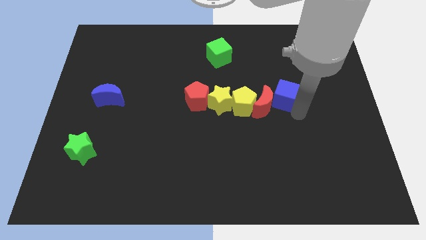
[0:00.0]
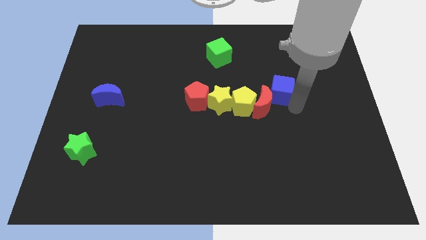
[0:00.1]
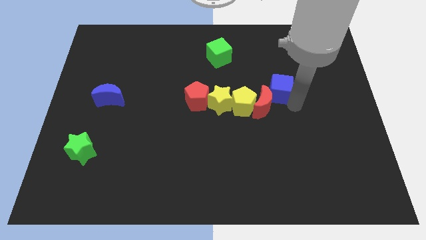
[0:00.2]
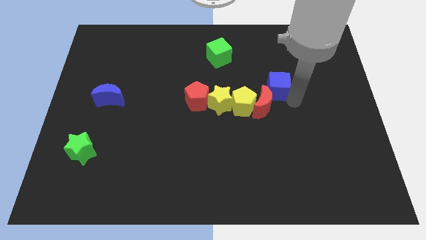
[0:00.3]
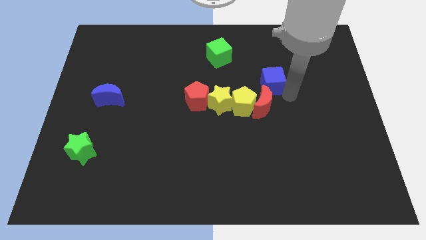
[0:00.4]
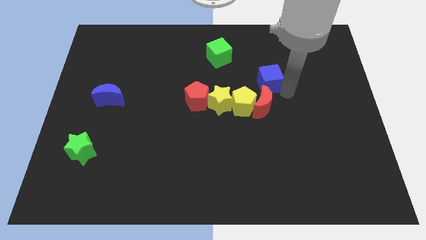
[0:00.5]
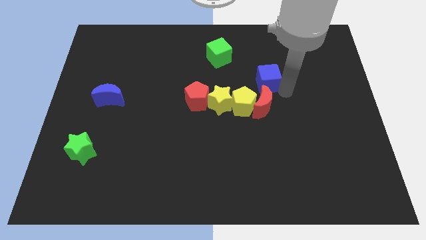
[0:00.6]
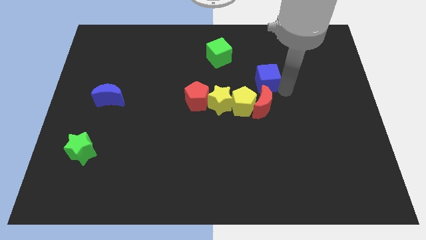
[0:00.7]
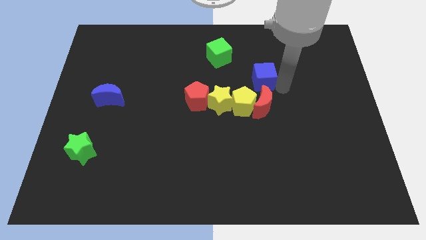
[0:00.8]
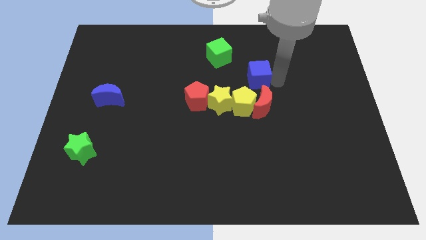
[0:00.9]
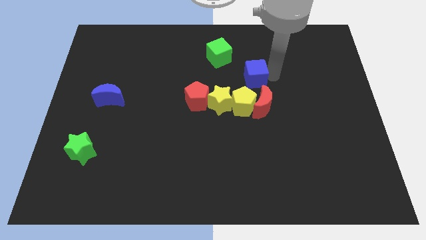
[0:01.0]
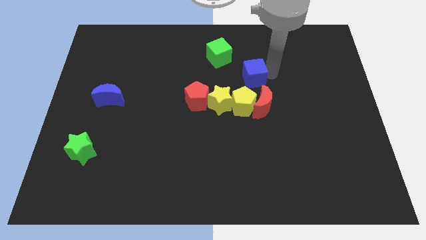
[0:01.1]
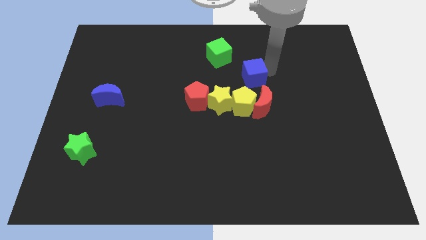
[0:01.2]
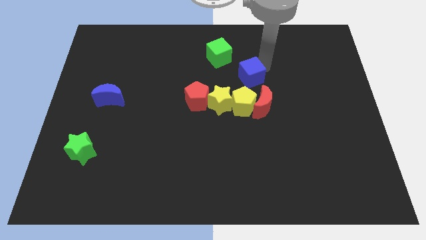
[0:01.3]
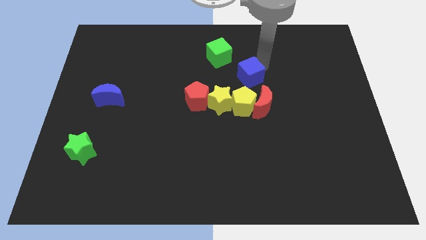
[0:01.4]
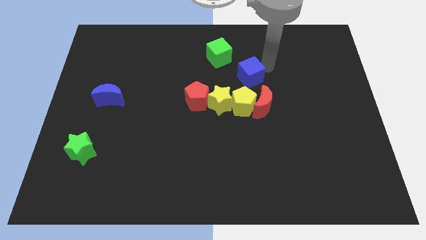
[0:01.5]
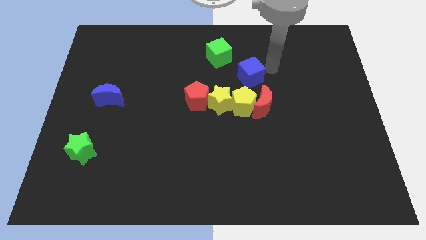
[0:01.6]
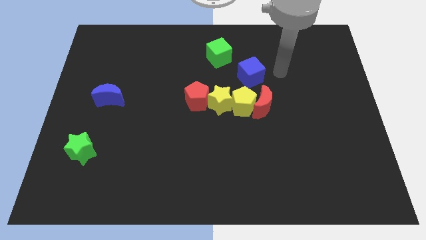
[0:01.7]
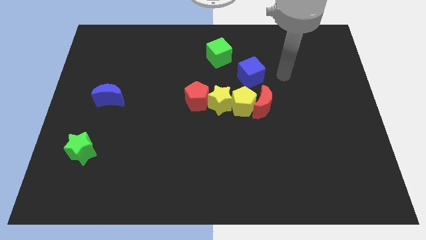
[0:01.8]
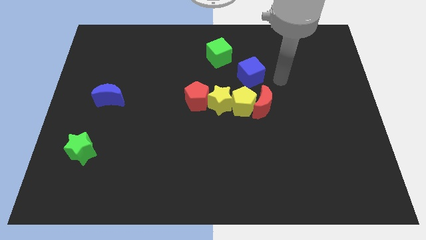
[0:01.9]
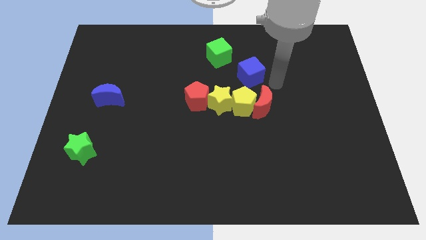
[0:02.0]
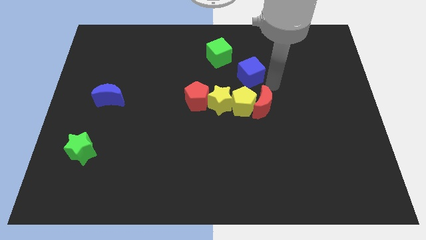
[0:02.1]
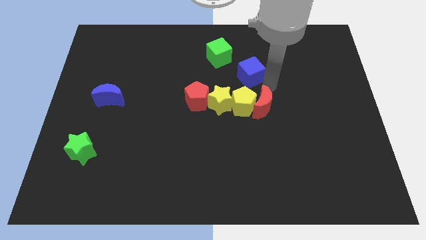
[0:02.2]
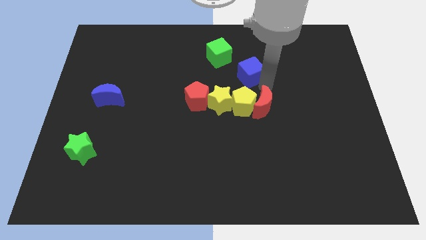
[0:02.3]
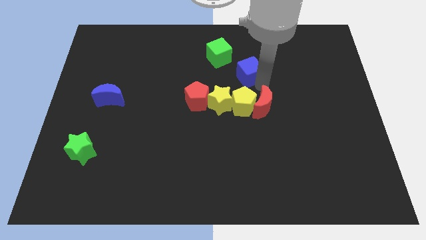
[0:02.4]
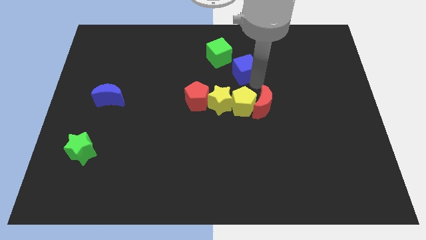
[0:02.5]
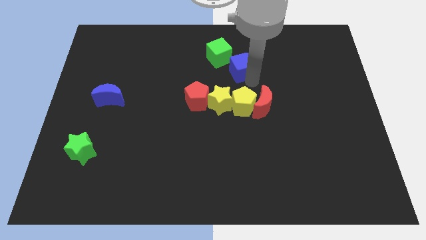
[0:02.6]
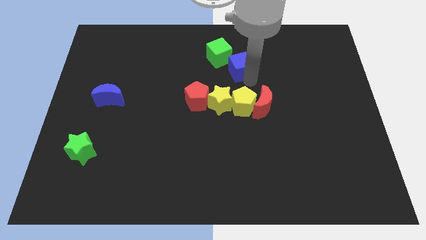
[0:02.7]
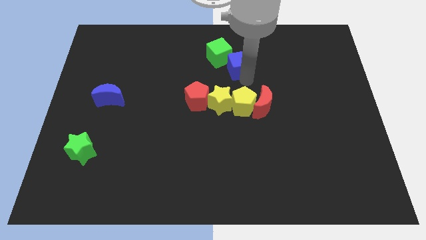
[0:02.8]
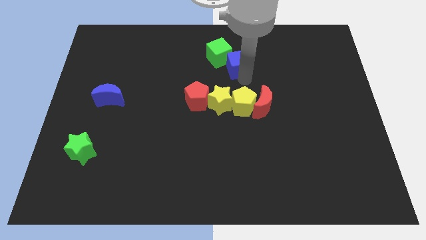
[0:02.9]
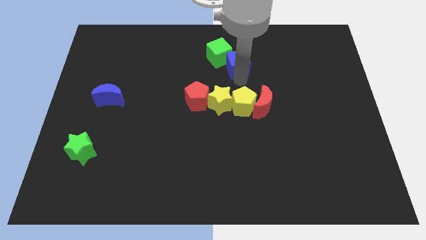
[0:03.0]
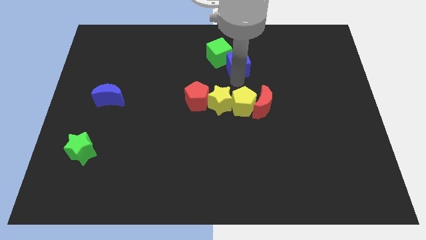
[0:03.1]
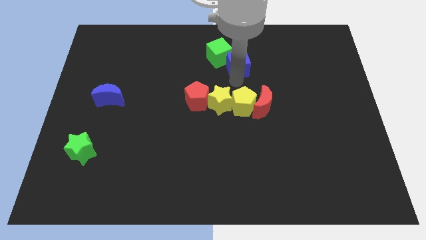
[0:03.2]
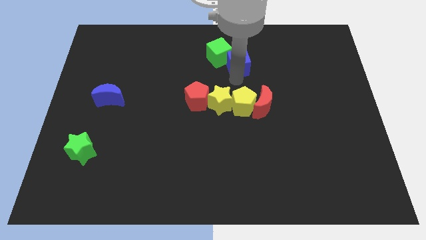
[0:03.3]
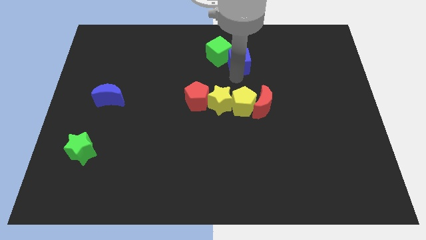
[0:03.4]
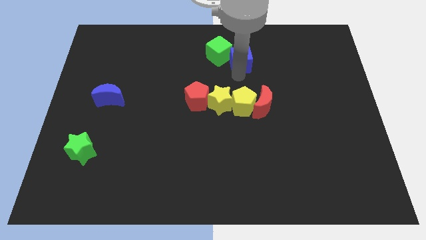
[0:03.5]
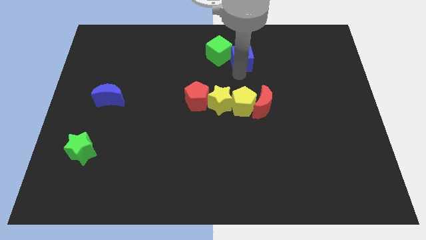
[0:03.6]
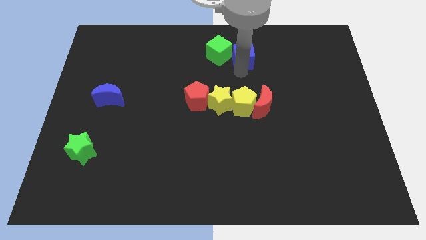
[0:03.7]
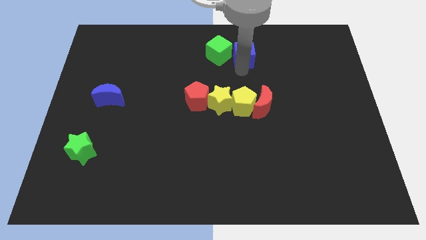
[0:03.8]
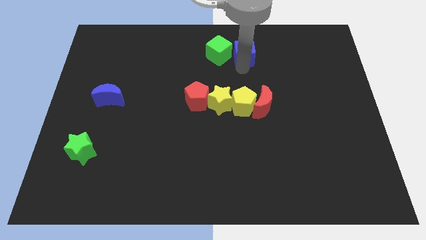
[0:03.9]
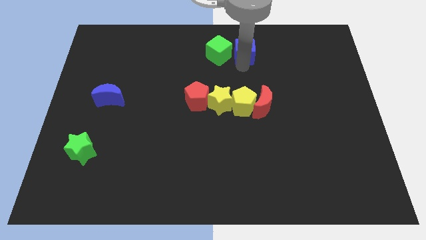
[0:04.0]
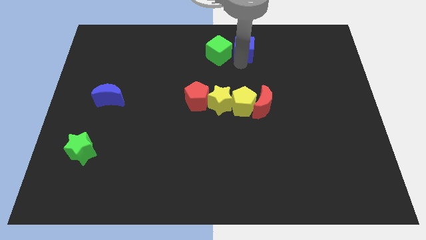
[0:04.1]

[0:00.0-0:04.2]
move blue cube into green cube

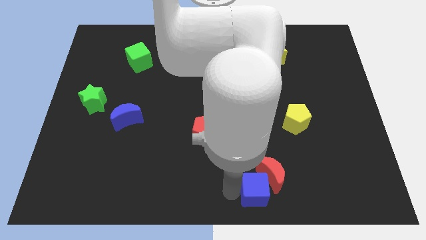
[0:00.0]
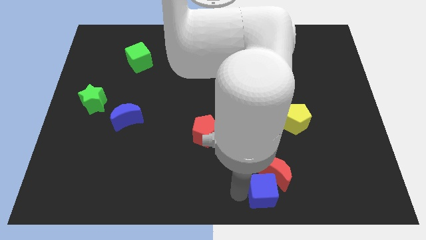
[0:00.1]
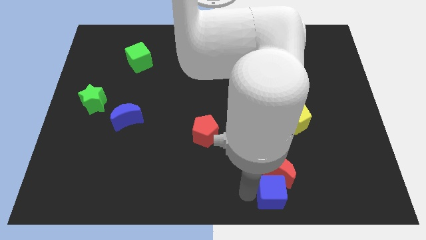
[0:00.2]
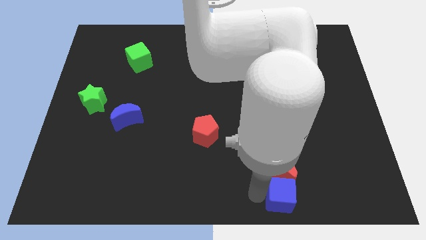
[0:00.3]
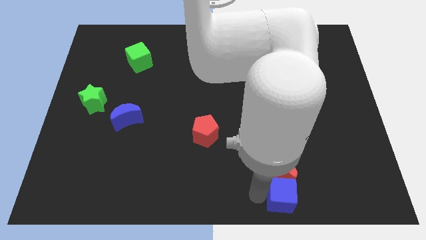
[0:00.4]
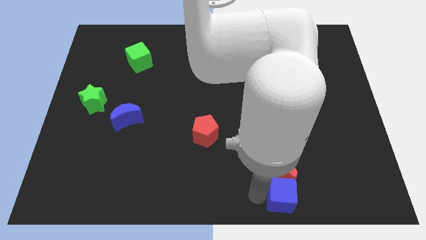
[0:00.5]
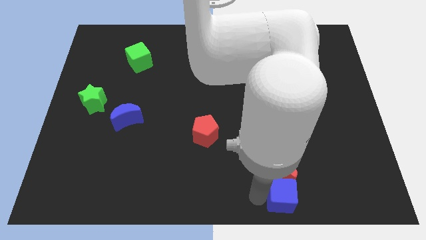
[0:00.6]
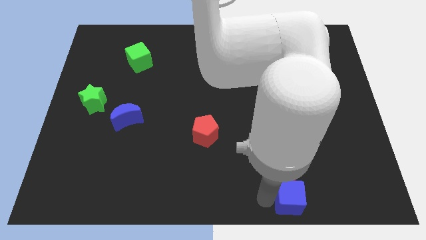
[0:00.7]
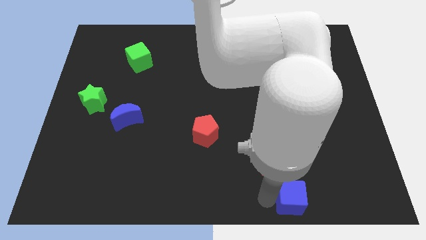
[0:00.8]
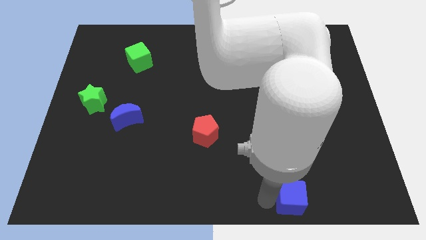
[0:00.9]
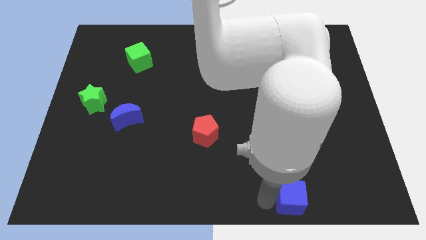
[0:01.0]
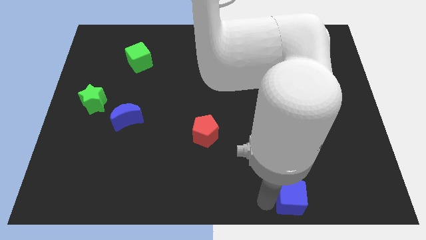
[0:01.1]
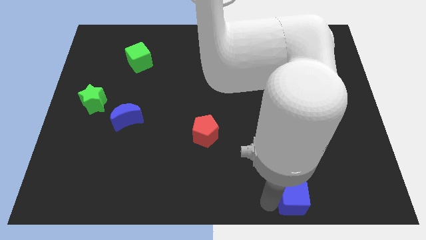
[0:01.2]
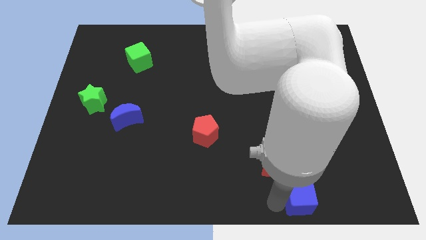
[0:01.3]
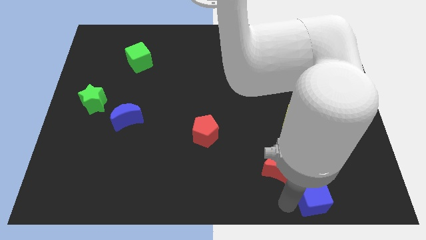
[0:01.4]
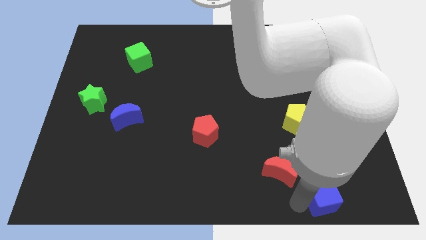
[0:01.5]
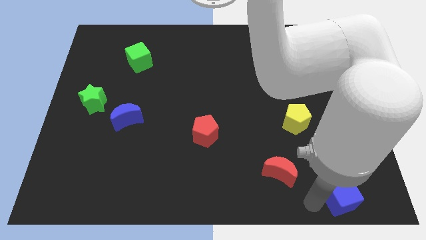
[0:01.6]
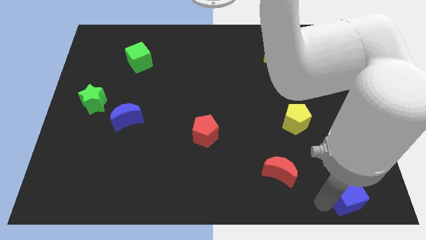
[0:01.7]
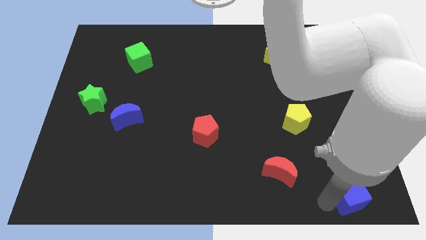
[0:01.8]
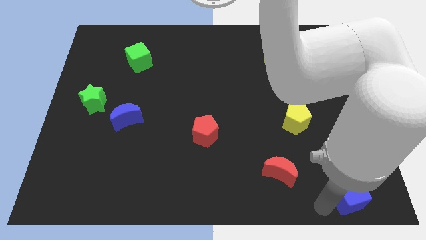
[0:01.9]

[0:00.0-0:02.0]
separate the blue cube from the red moon

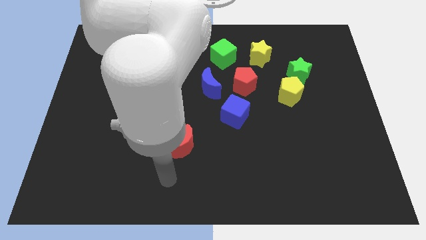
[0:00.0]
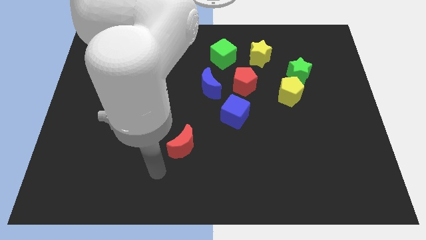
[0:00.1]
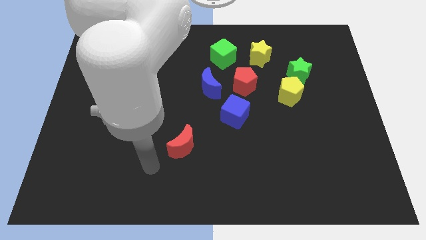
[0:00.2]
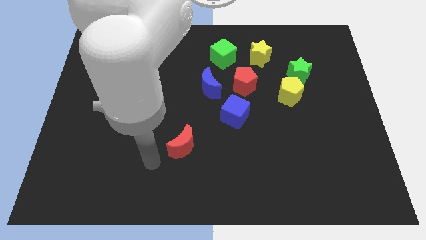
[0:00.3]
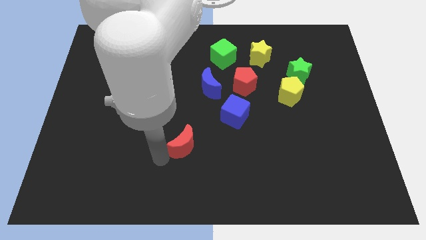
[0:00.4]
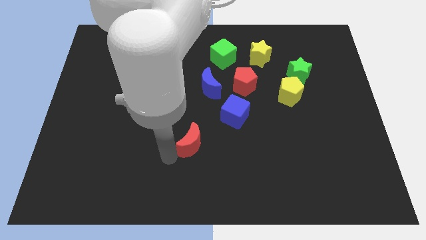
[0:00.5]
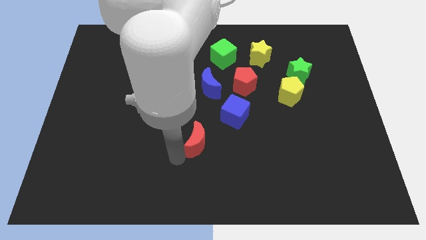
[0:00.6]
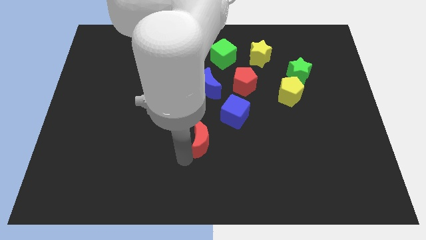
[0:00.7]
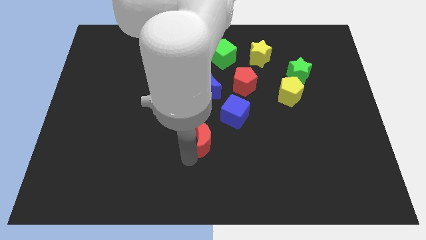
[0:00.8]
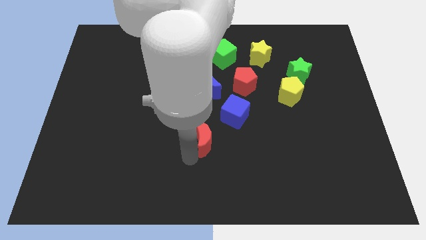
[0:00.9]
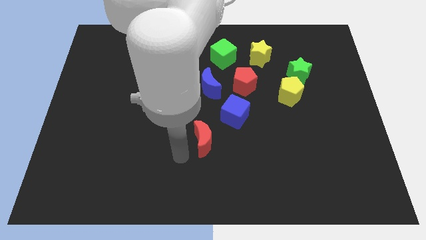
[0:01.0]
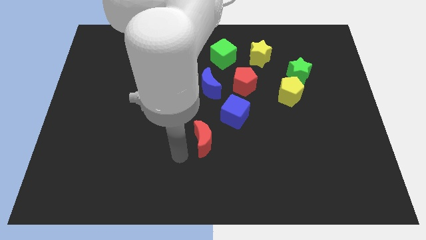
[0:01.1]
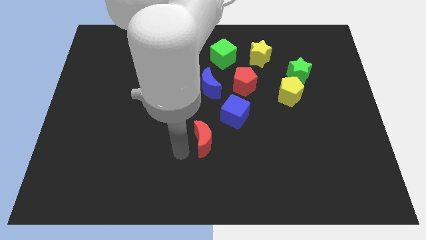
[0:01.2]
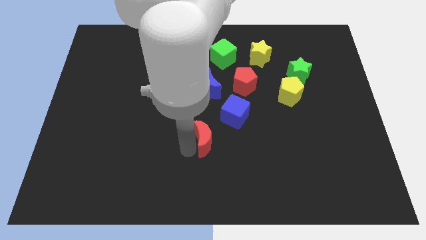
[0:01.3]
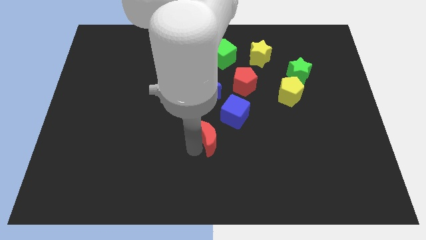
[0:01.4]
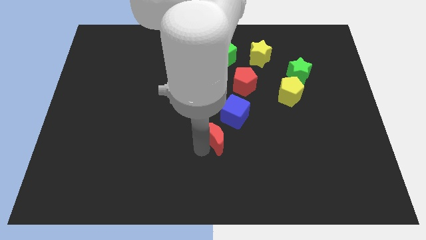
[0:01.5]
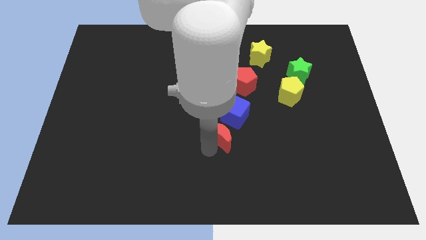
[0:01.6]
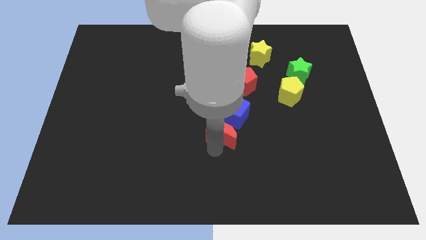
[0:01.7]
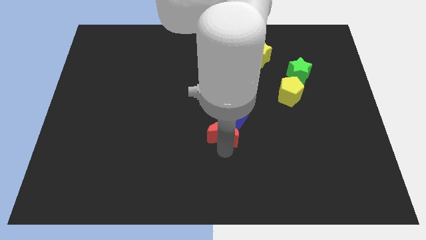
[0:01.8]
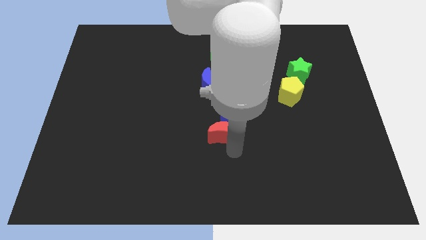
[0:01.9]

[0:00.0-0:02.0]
put the red moon diagonally below to blue cube

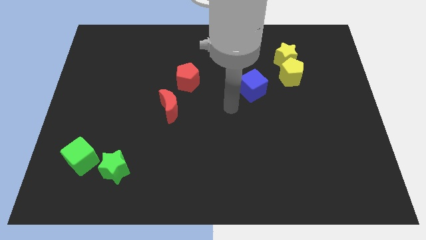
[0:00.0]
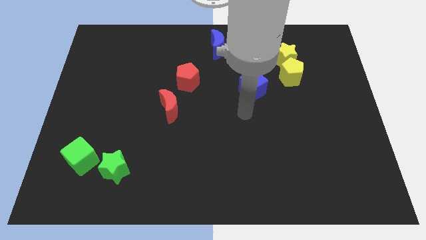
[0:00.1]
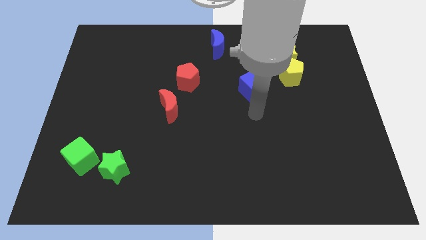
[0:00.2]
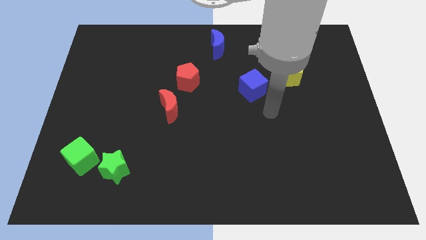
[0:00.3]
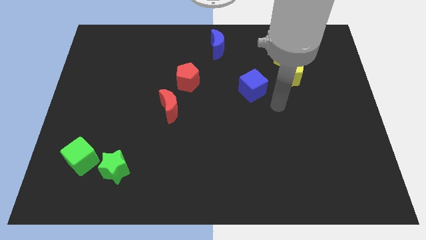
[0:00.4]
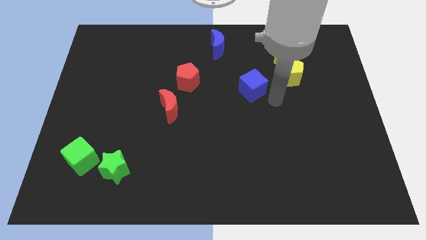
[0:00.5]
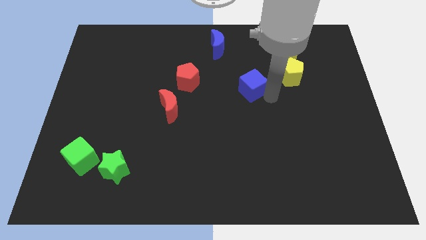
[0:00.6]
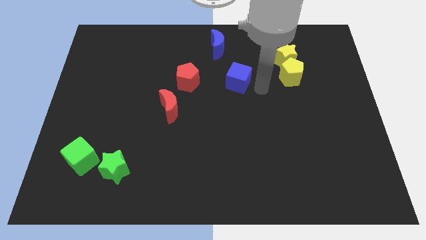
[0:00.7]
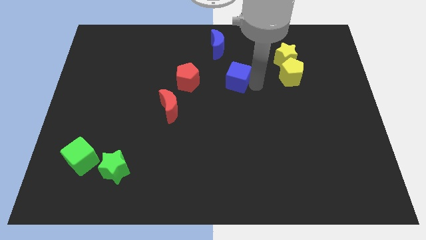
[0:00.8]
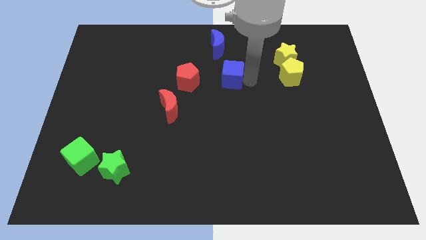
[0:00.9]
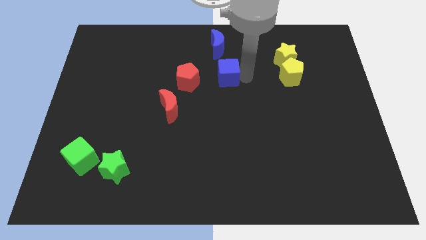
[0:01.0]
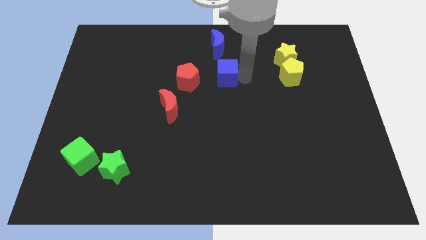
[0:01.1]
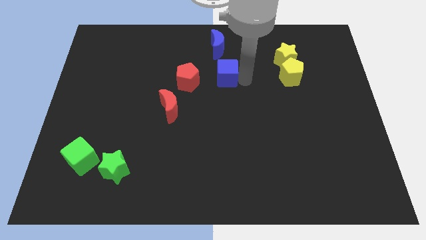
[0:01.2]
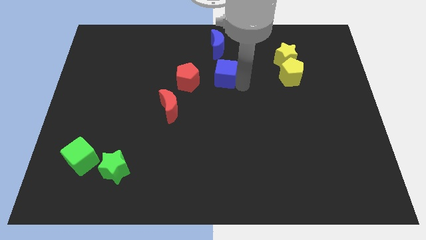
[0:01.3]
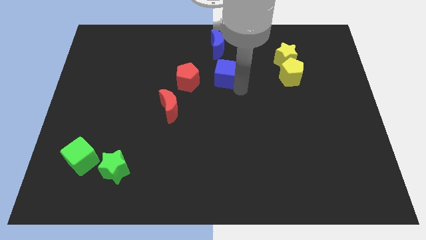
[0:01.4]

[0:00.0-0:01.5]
place the blue cube below the blue crescent
